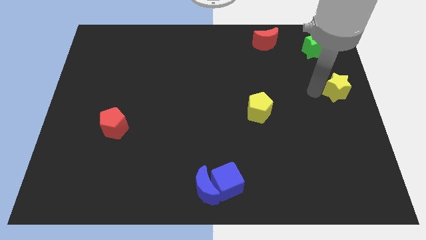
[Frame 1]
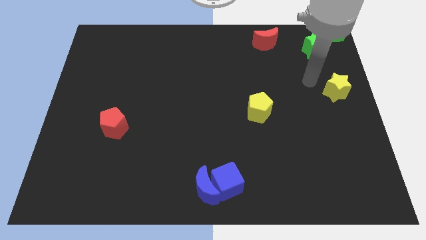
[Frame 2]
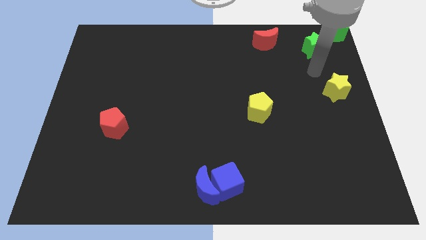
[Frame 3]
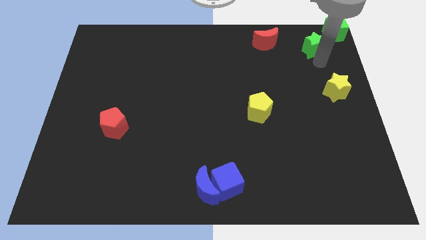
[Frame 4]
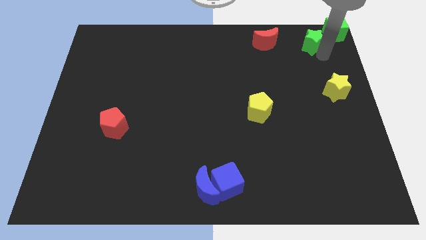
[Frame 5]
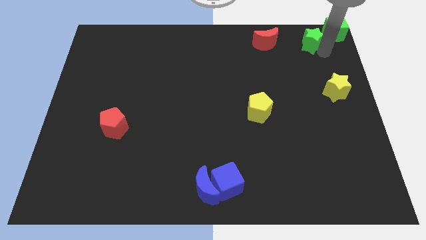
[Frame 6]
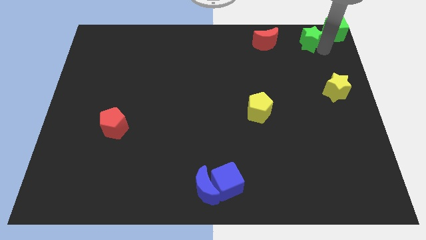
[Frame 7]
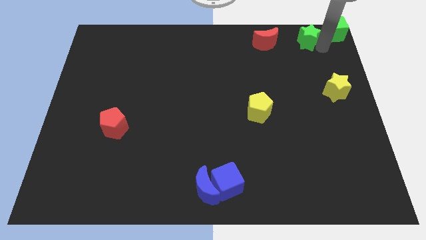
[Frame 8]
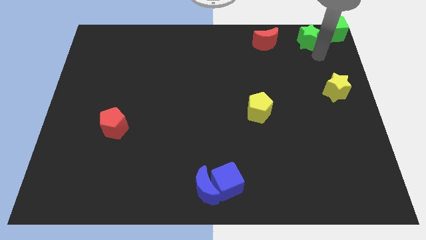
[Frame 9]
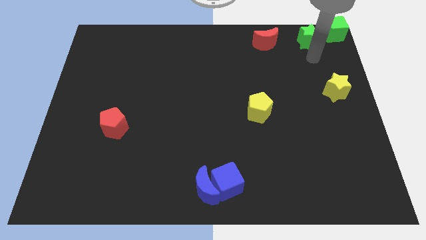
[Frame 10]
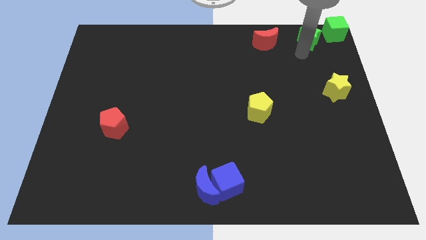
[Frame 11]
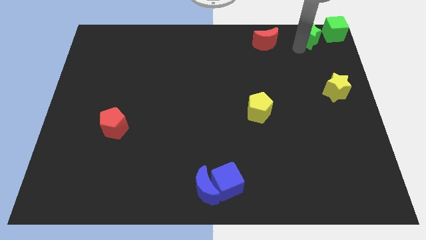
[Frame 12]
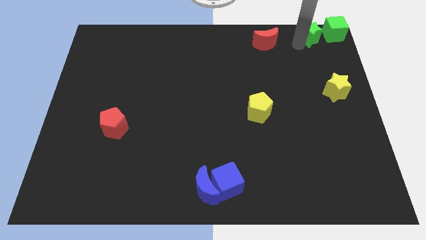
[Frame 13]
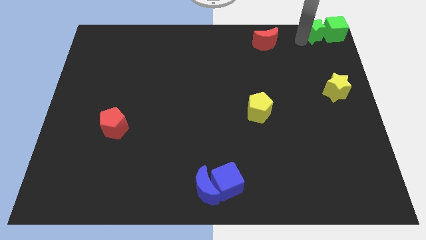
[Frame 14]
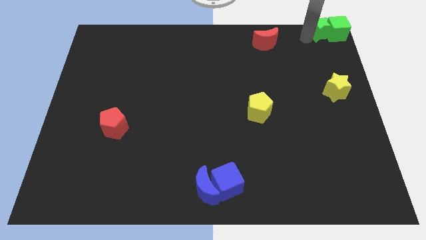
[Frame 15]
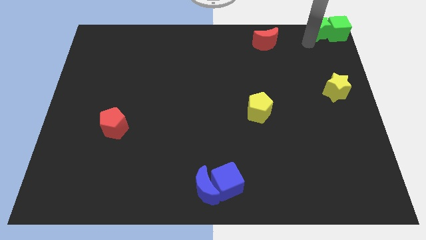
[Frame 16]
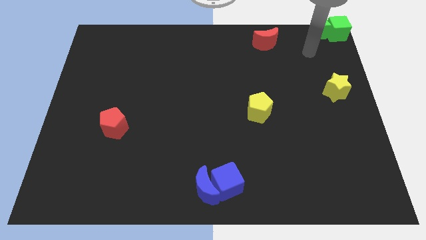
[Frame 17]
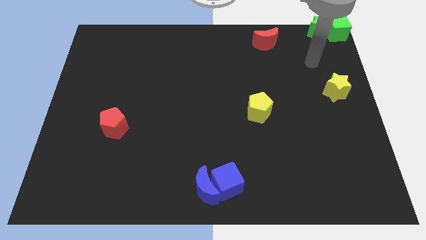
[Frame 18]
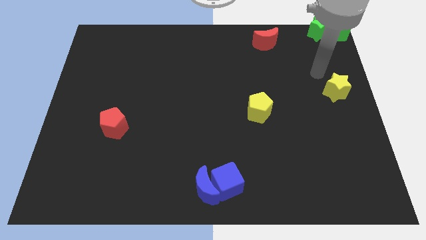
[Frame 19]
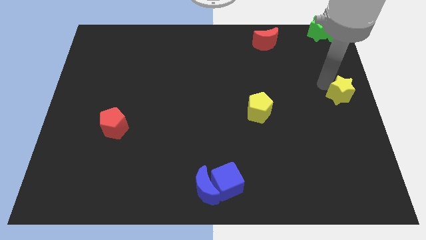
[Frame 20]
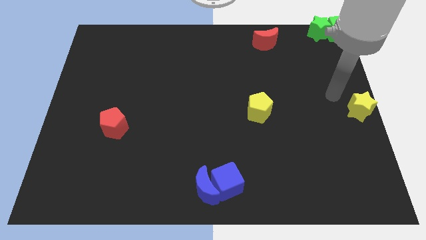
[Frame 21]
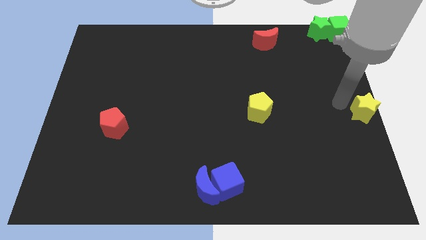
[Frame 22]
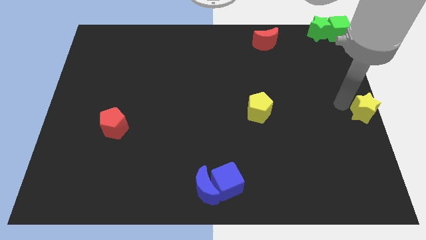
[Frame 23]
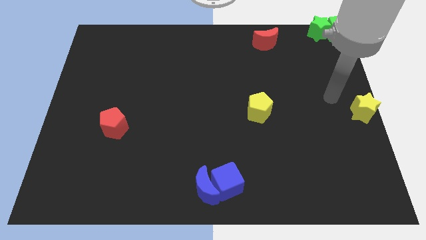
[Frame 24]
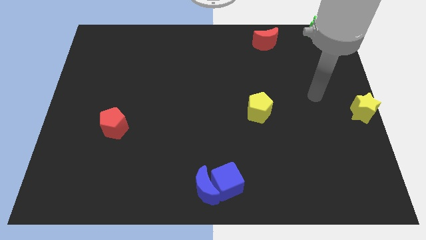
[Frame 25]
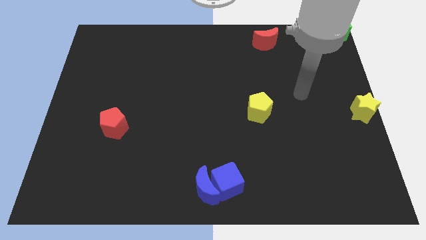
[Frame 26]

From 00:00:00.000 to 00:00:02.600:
place green star into green cube along with move yellow star towards right middle of the board

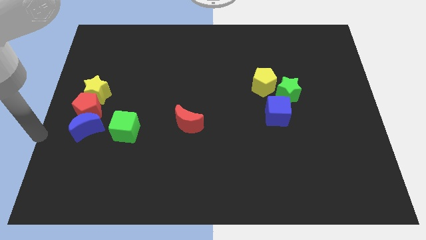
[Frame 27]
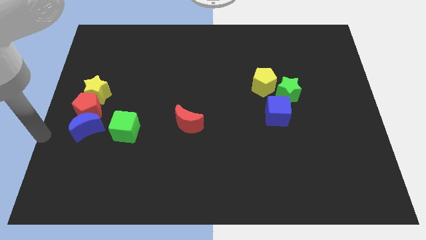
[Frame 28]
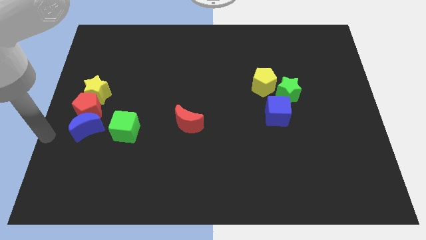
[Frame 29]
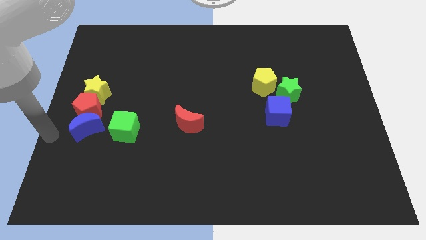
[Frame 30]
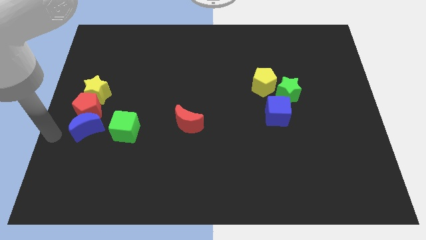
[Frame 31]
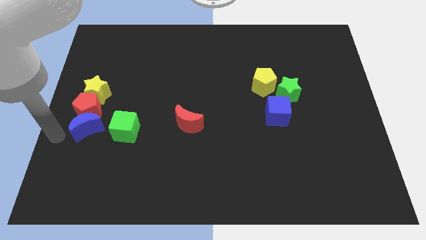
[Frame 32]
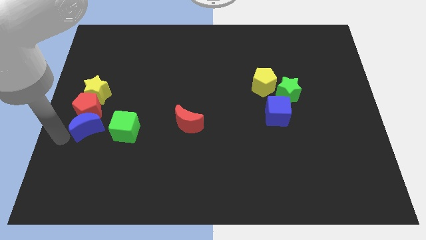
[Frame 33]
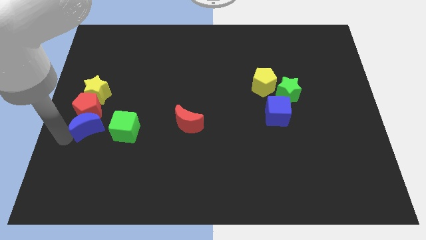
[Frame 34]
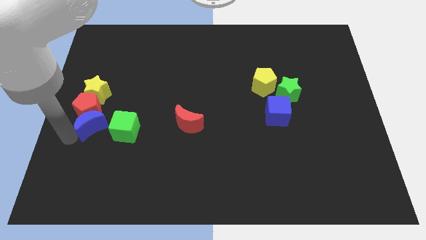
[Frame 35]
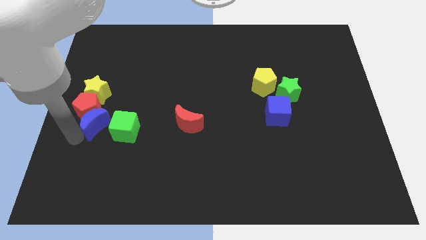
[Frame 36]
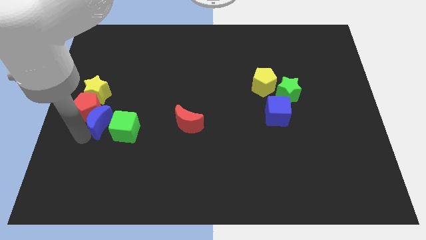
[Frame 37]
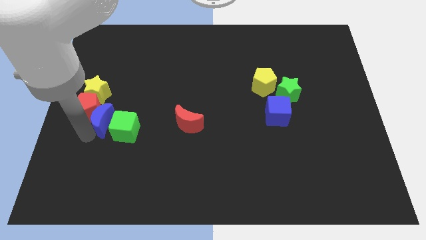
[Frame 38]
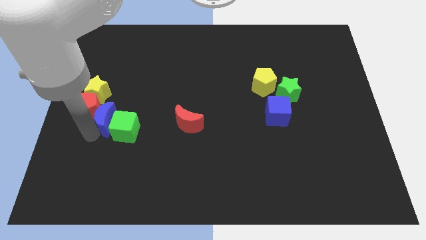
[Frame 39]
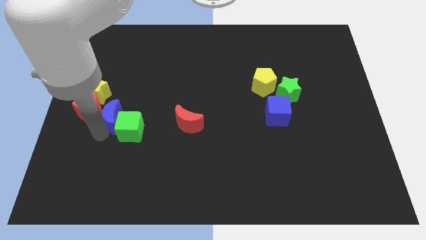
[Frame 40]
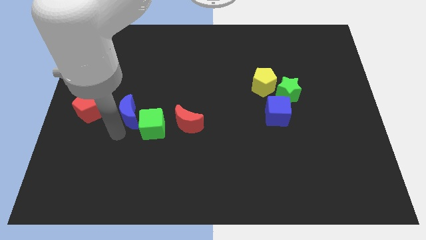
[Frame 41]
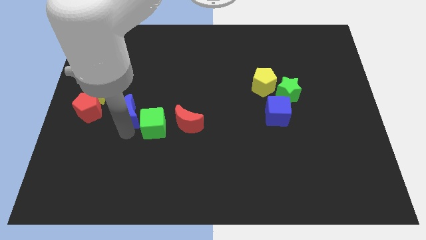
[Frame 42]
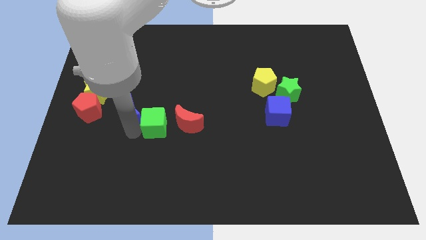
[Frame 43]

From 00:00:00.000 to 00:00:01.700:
place blue crescent in between red pentagon and green cube

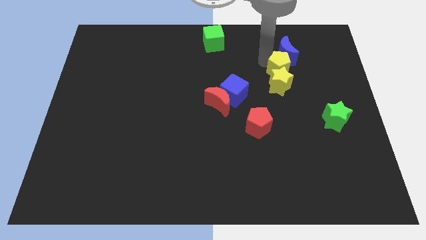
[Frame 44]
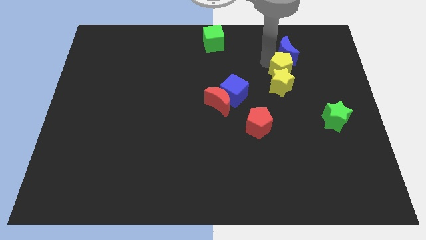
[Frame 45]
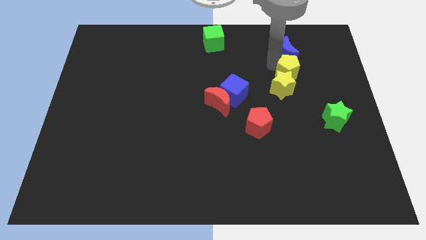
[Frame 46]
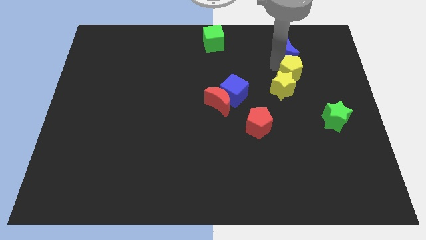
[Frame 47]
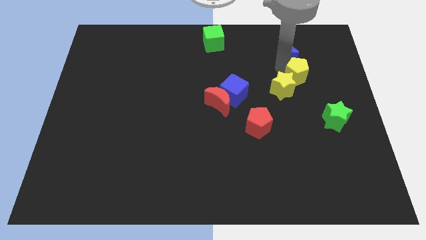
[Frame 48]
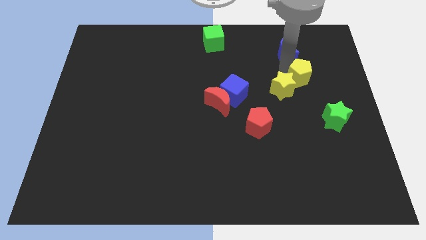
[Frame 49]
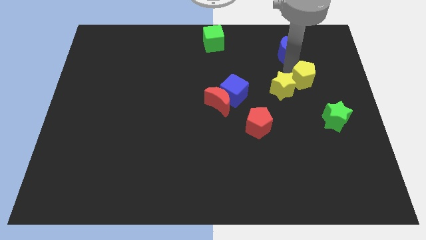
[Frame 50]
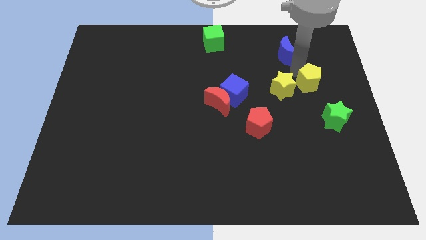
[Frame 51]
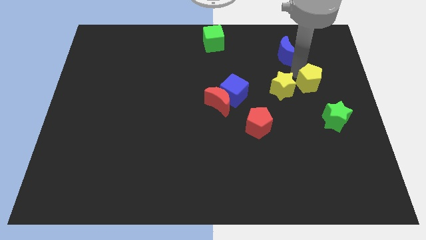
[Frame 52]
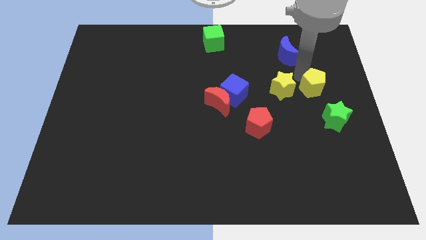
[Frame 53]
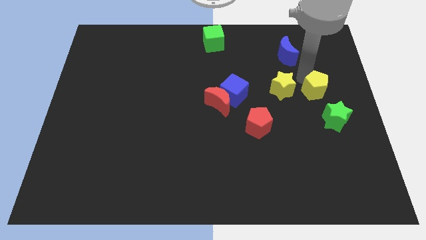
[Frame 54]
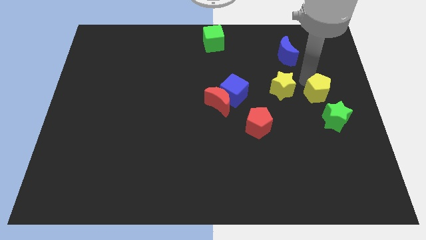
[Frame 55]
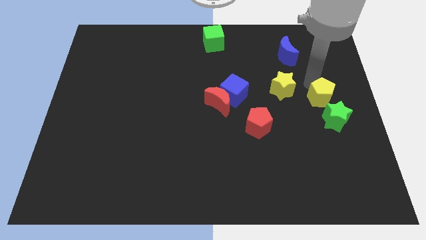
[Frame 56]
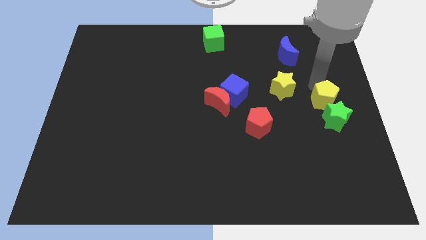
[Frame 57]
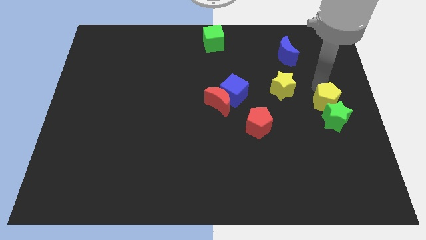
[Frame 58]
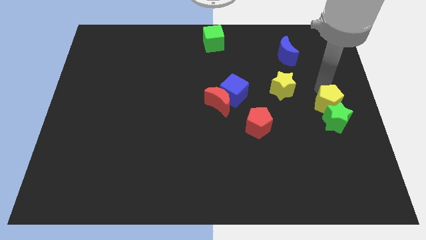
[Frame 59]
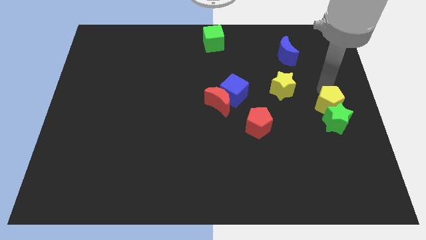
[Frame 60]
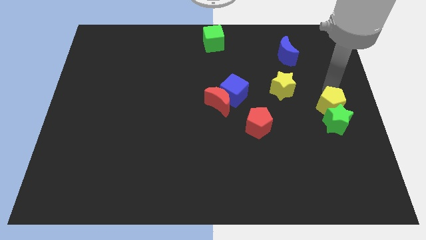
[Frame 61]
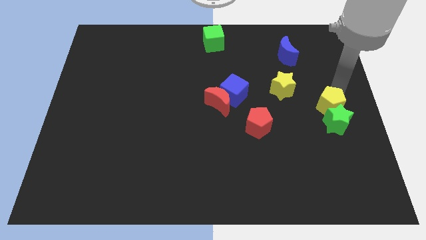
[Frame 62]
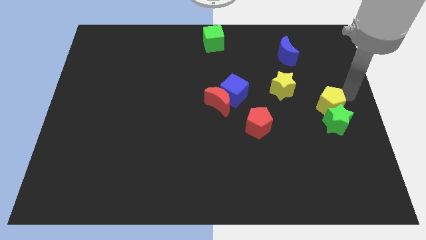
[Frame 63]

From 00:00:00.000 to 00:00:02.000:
push the yellow pentagon to the top of the green star

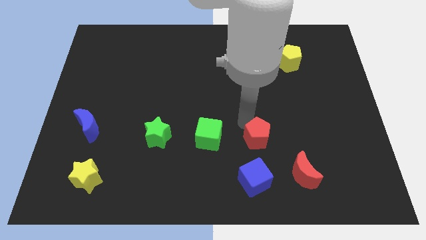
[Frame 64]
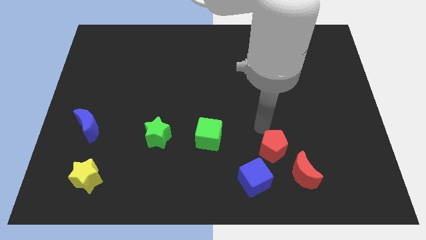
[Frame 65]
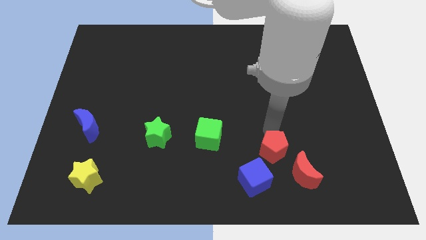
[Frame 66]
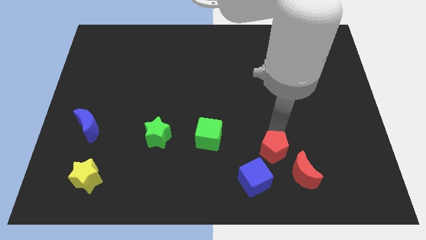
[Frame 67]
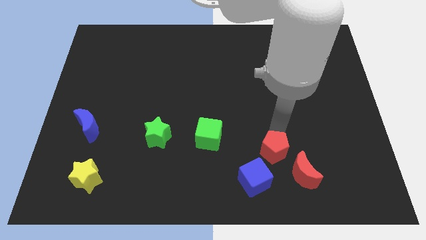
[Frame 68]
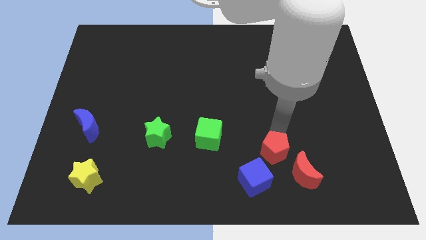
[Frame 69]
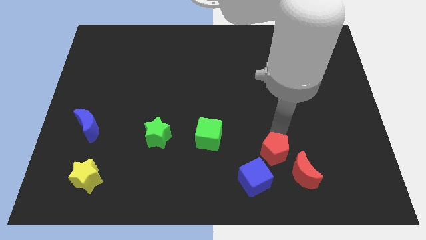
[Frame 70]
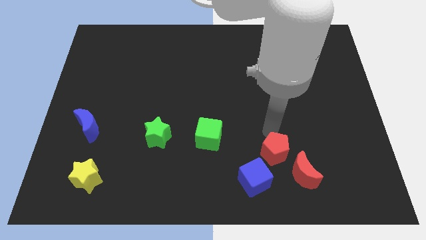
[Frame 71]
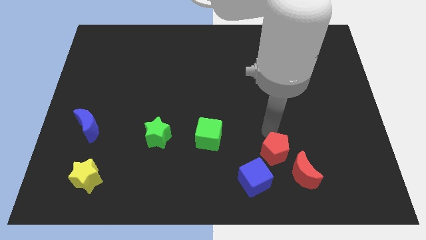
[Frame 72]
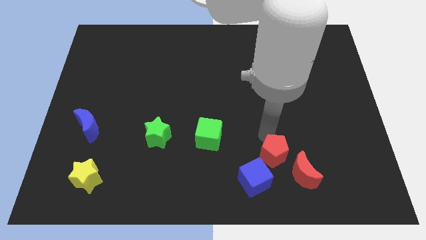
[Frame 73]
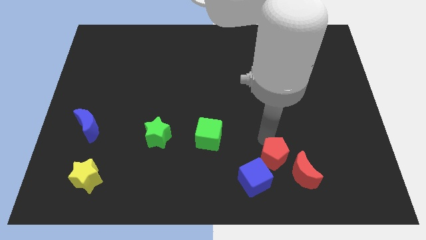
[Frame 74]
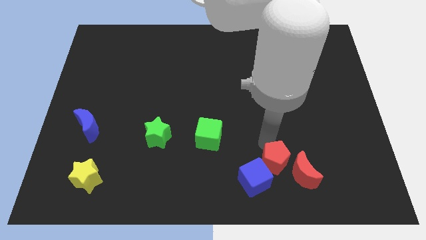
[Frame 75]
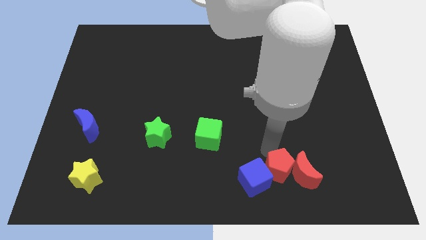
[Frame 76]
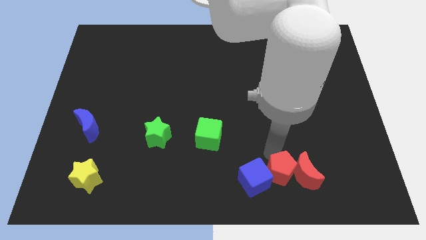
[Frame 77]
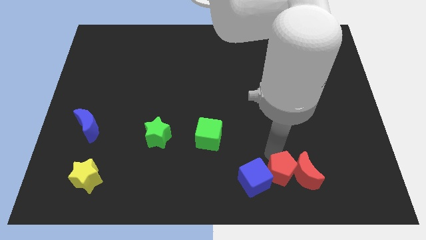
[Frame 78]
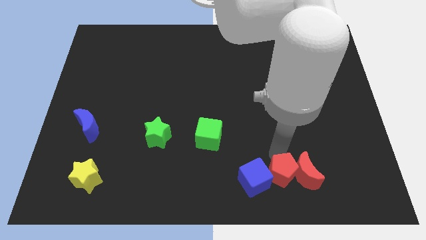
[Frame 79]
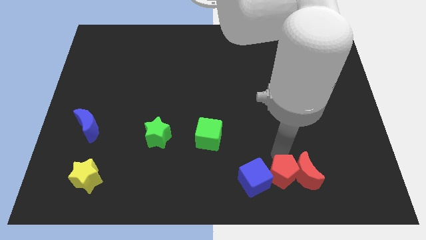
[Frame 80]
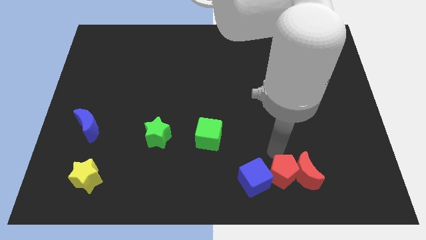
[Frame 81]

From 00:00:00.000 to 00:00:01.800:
place the red pentagon in between the red crescent and the blue cube

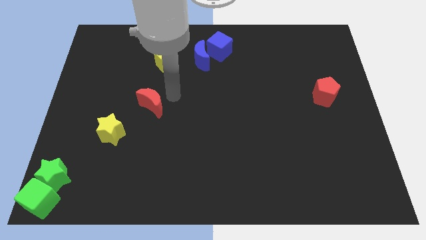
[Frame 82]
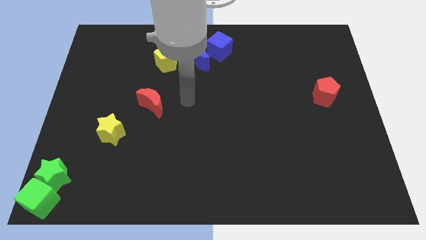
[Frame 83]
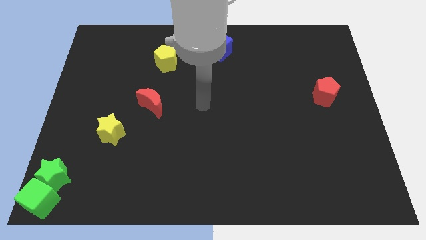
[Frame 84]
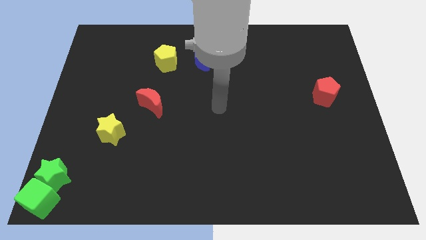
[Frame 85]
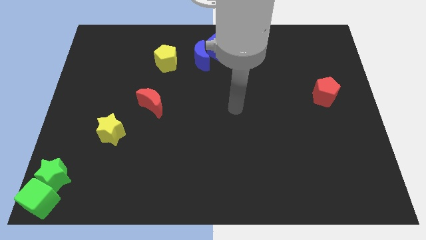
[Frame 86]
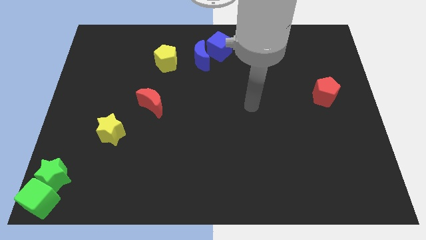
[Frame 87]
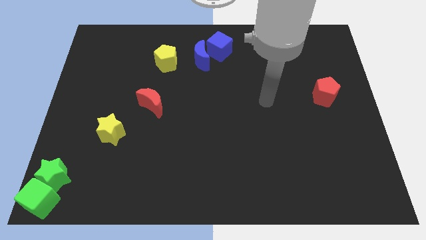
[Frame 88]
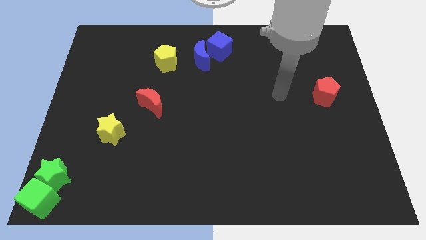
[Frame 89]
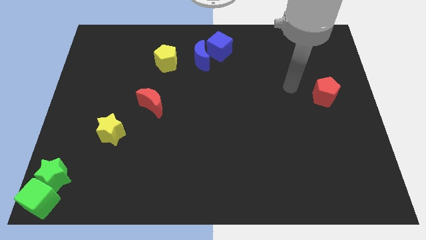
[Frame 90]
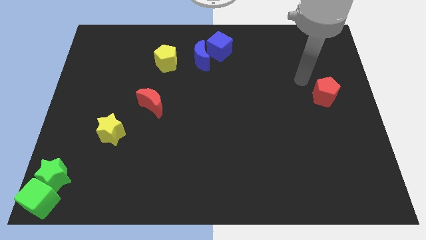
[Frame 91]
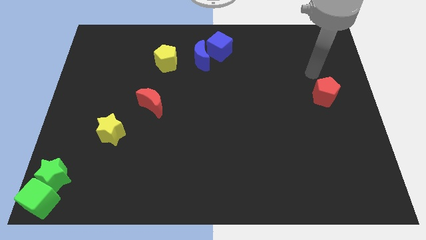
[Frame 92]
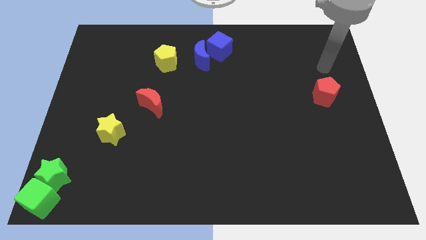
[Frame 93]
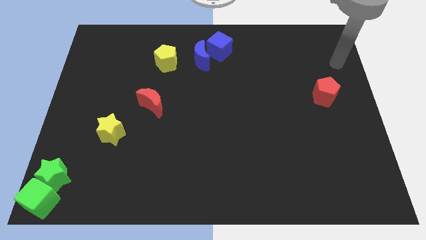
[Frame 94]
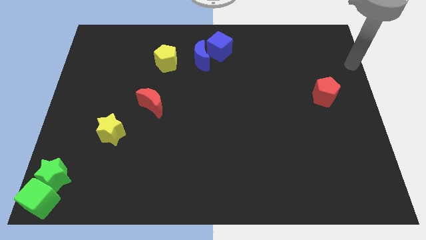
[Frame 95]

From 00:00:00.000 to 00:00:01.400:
move your arm away from the red moon
